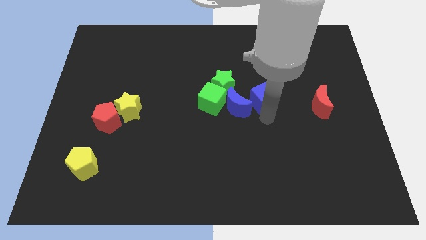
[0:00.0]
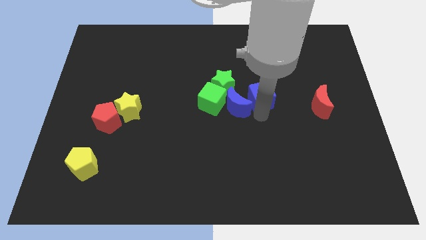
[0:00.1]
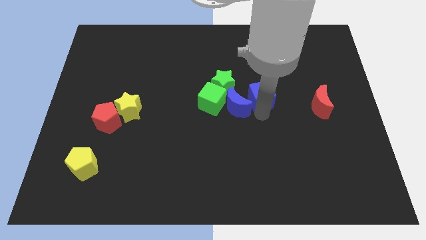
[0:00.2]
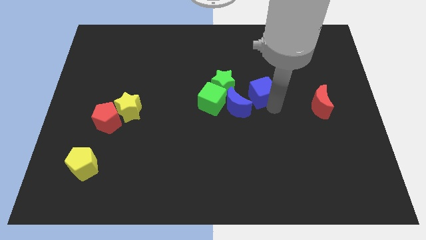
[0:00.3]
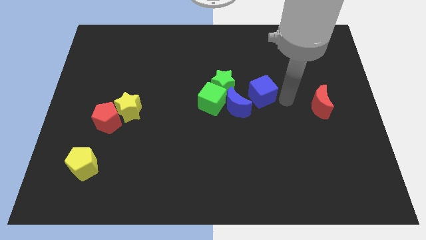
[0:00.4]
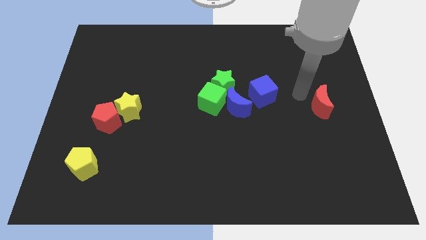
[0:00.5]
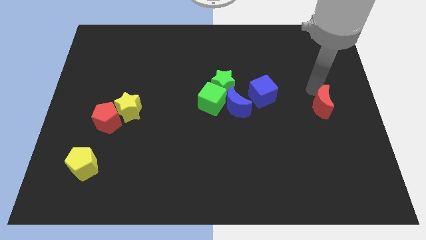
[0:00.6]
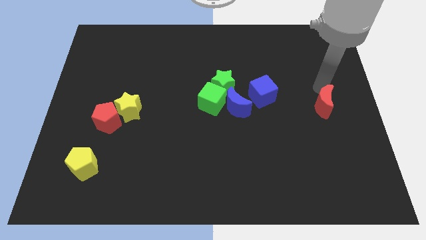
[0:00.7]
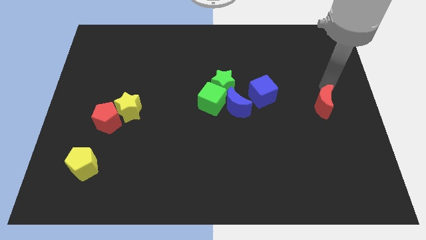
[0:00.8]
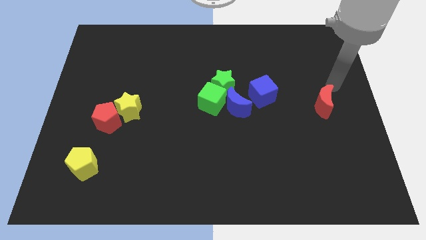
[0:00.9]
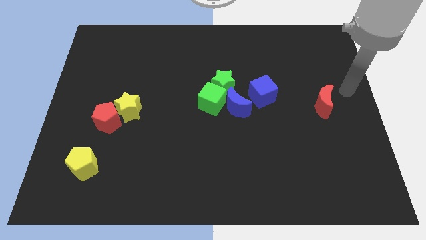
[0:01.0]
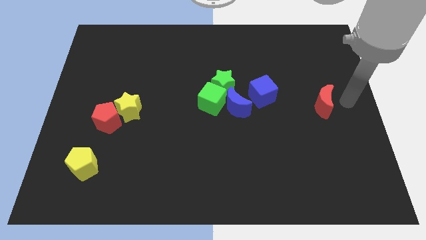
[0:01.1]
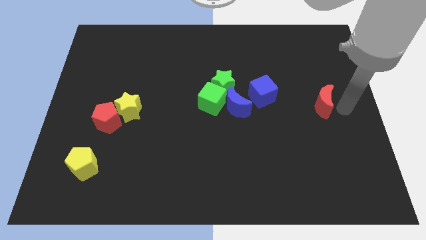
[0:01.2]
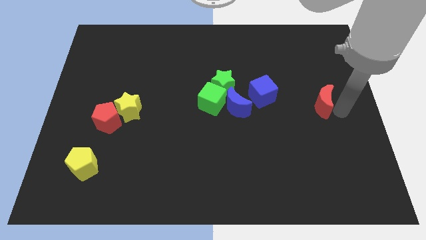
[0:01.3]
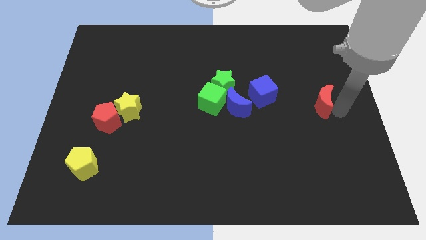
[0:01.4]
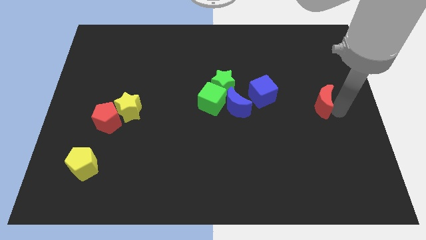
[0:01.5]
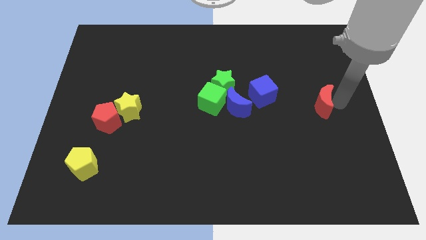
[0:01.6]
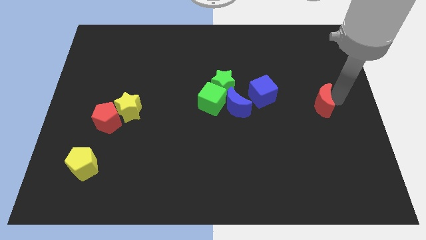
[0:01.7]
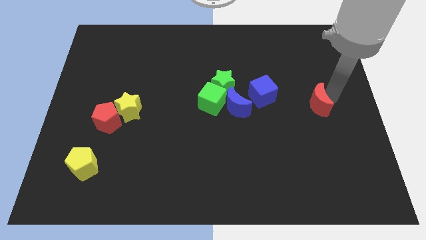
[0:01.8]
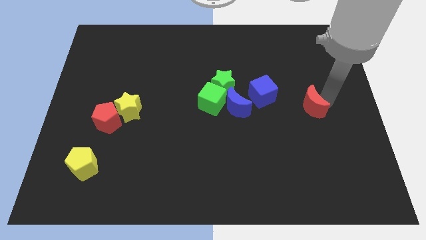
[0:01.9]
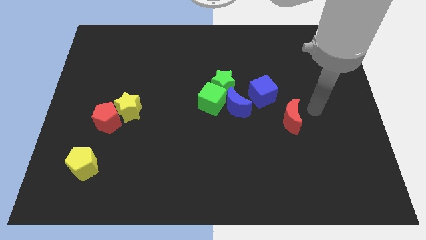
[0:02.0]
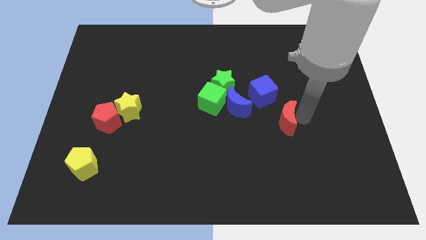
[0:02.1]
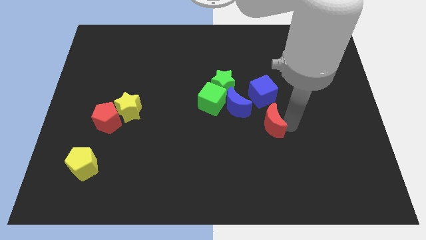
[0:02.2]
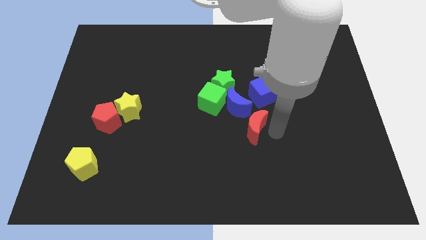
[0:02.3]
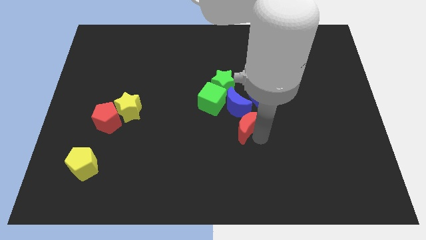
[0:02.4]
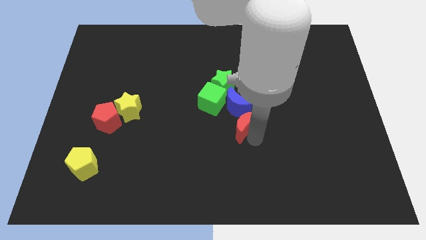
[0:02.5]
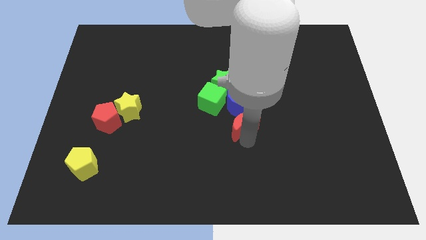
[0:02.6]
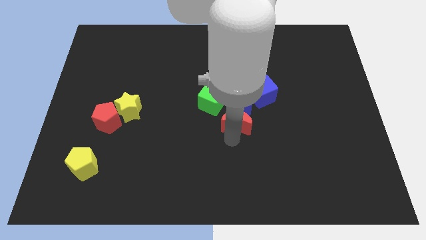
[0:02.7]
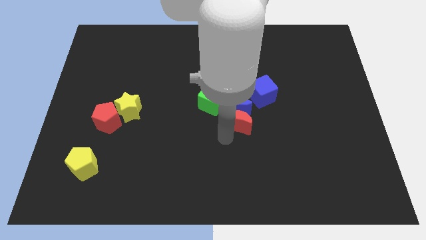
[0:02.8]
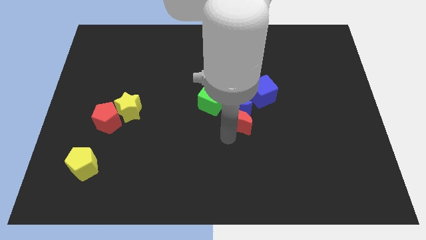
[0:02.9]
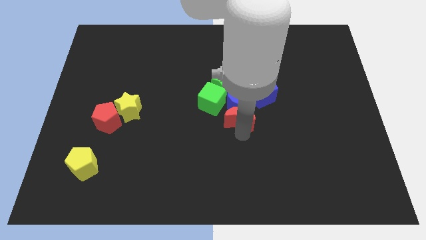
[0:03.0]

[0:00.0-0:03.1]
place the red crescent below the blue crescent

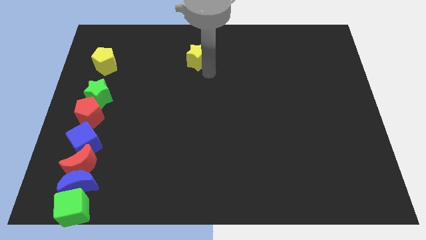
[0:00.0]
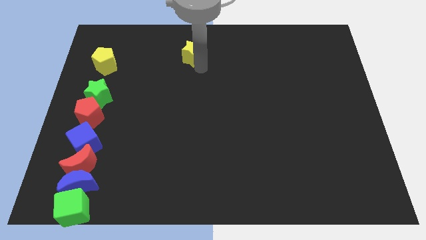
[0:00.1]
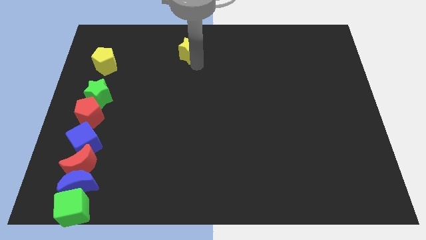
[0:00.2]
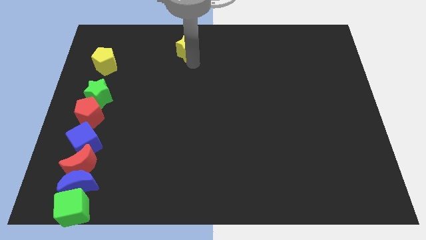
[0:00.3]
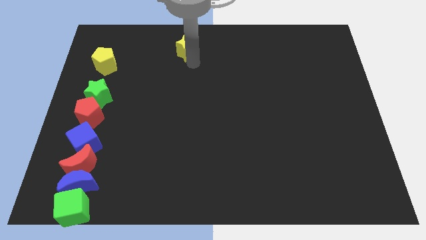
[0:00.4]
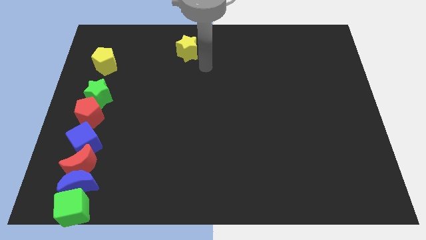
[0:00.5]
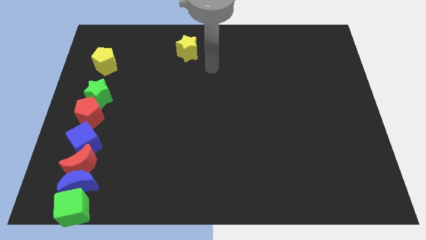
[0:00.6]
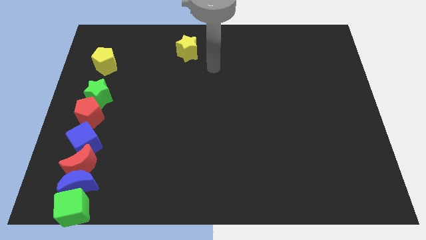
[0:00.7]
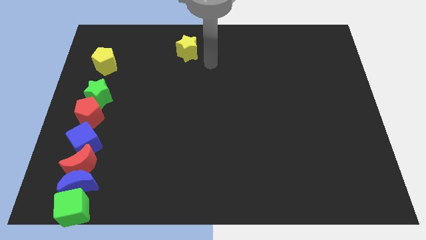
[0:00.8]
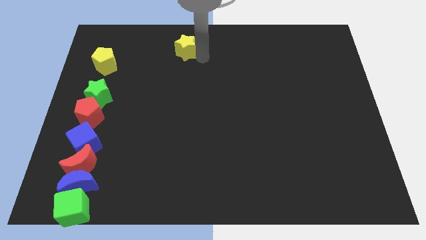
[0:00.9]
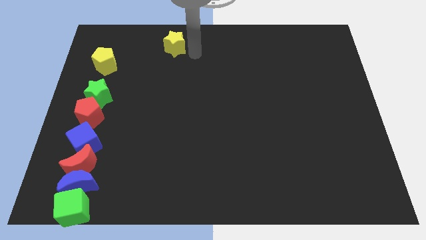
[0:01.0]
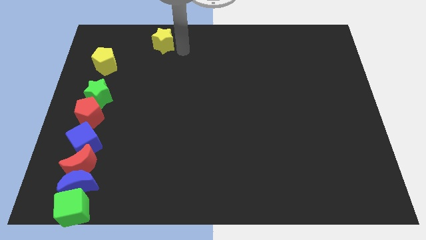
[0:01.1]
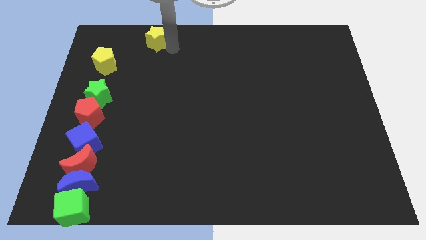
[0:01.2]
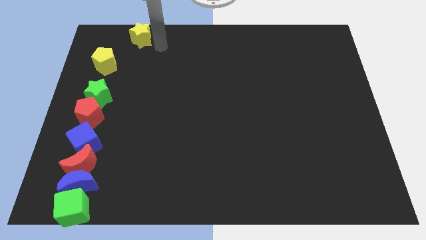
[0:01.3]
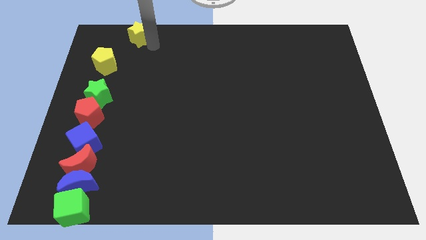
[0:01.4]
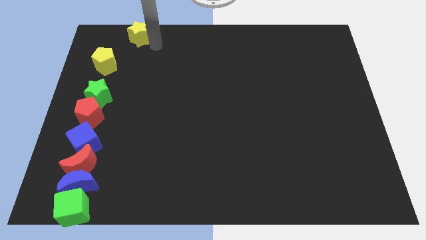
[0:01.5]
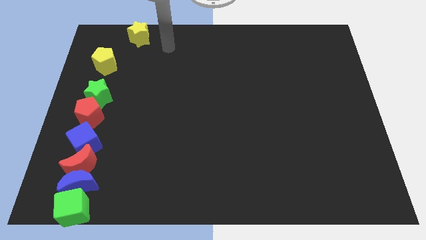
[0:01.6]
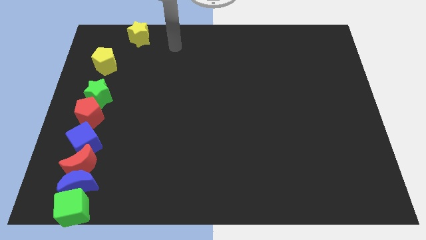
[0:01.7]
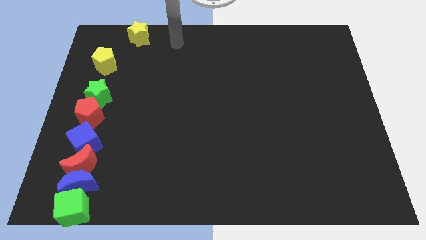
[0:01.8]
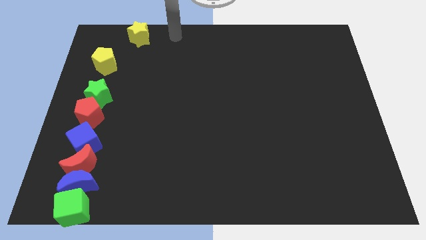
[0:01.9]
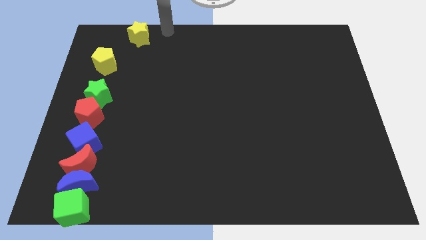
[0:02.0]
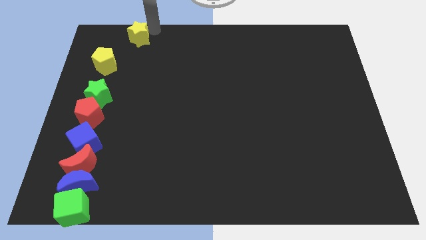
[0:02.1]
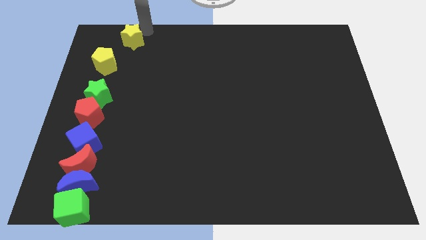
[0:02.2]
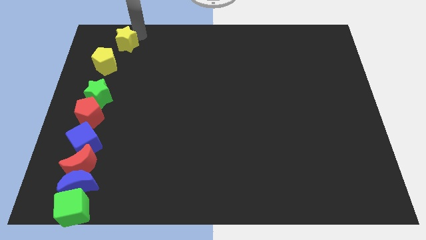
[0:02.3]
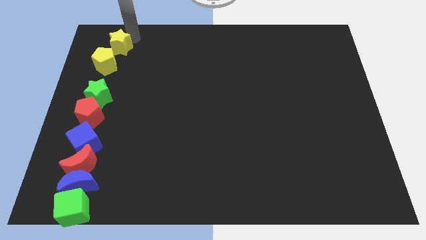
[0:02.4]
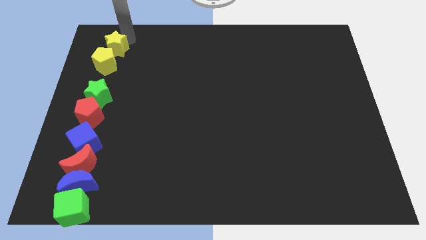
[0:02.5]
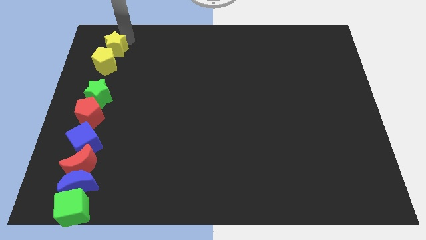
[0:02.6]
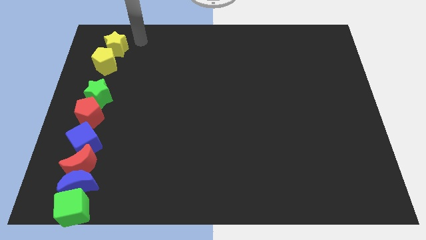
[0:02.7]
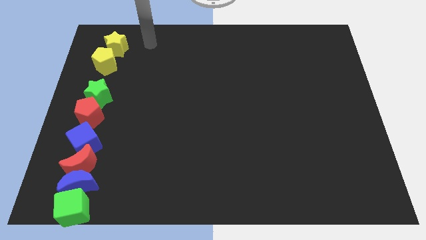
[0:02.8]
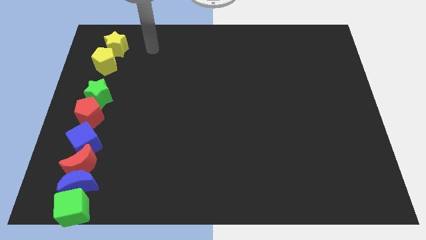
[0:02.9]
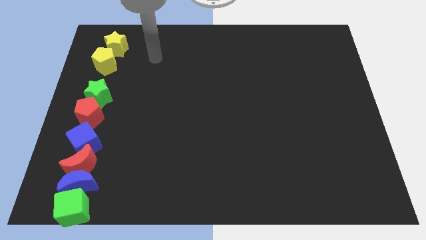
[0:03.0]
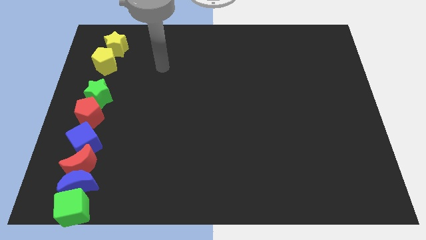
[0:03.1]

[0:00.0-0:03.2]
push the yellow star above the yellow pentagon

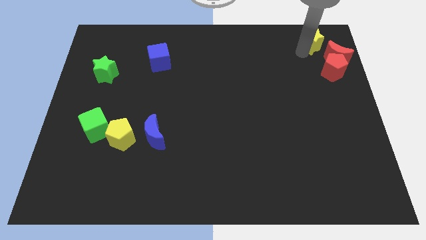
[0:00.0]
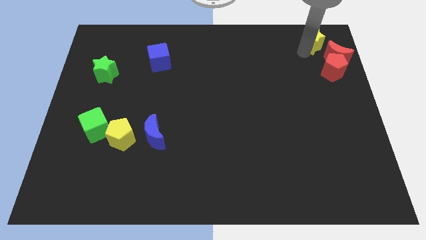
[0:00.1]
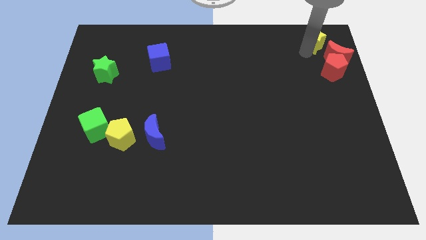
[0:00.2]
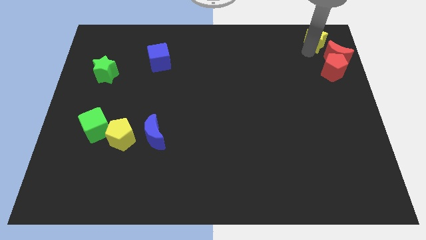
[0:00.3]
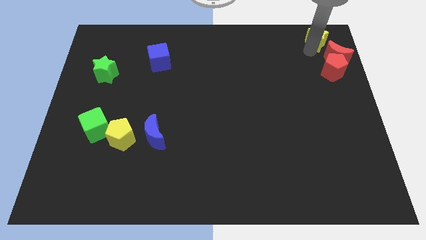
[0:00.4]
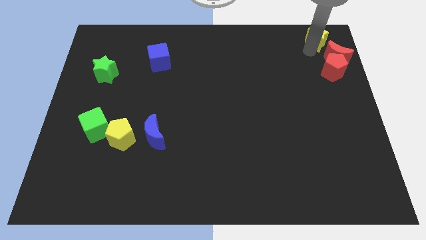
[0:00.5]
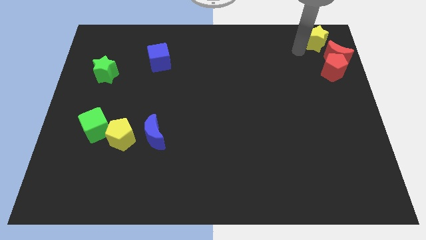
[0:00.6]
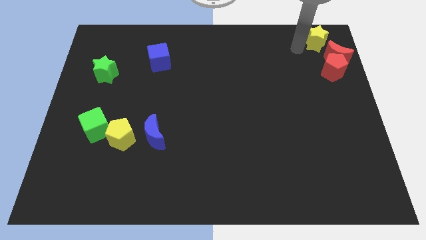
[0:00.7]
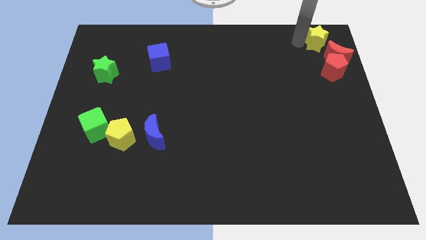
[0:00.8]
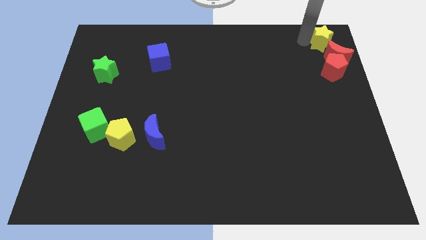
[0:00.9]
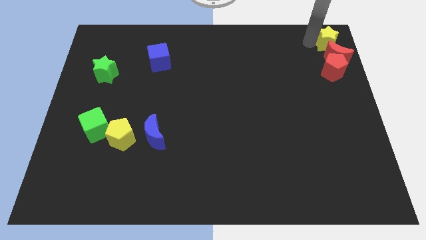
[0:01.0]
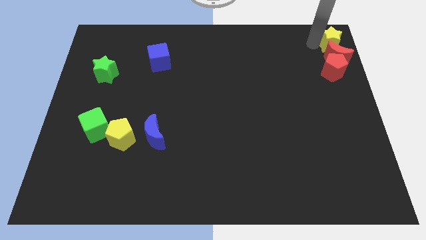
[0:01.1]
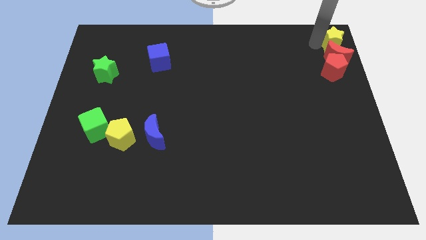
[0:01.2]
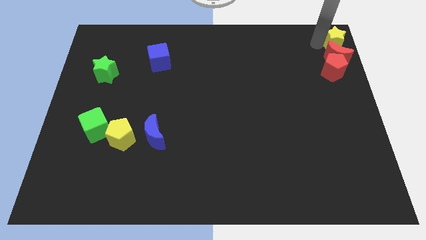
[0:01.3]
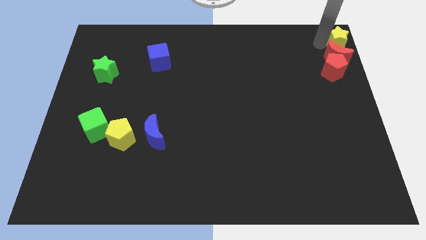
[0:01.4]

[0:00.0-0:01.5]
place yellow star above the red moon

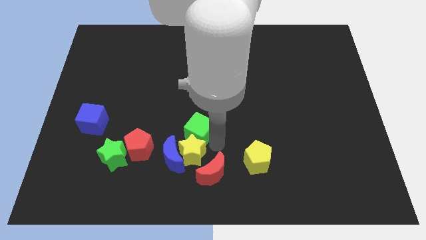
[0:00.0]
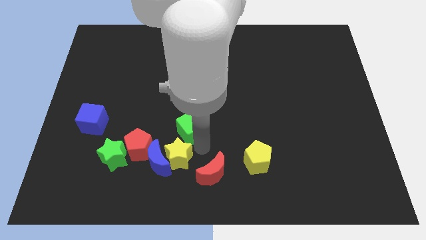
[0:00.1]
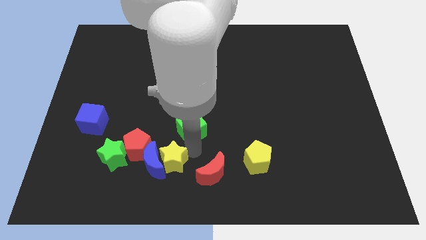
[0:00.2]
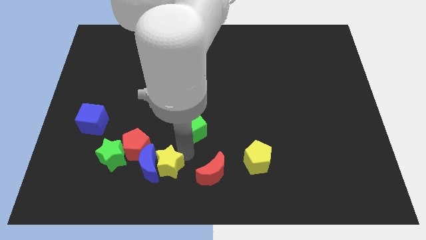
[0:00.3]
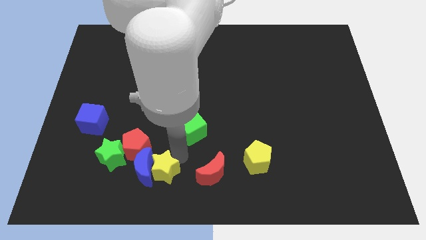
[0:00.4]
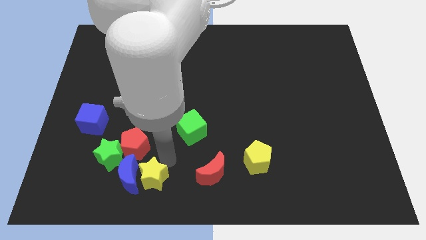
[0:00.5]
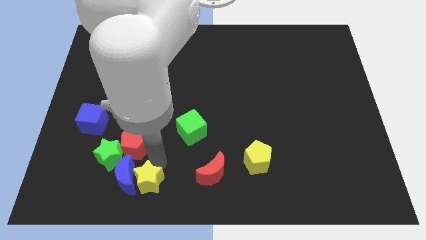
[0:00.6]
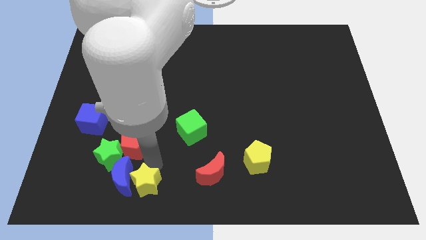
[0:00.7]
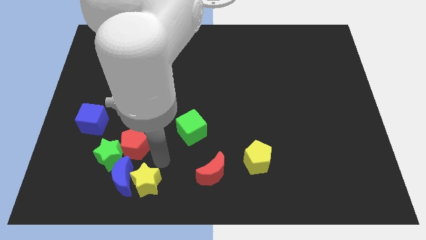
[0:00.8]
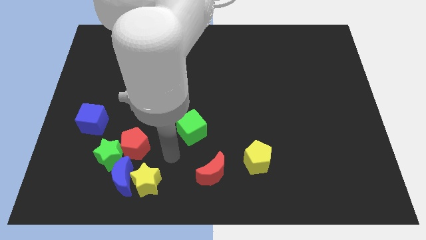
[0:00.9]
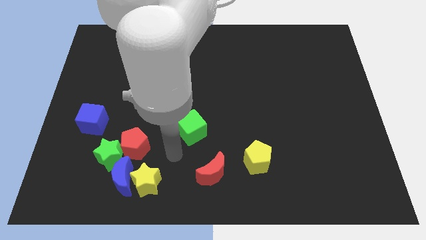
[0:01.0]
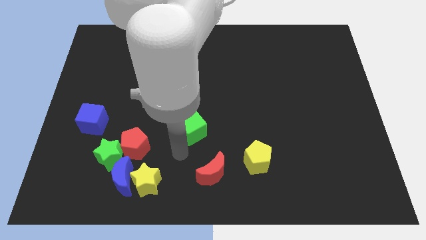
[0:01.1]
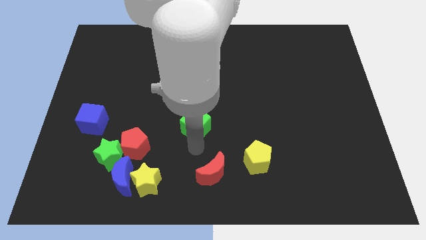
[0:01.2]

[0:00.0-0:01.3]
push the yellow star along with blue crescent close to red the pentagon on the board
